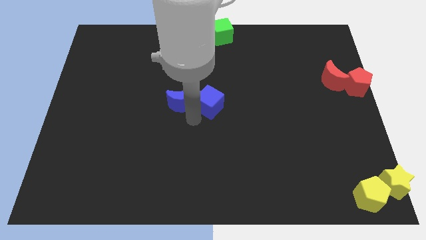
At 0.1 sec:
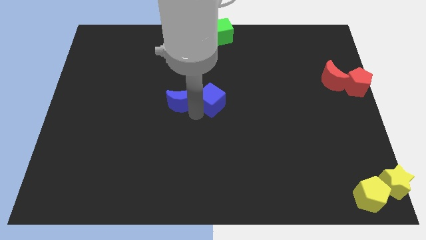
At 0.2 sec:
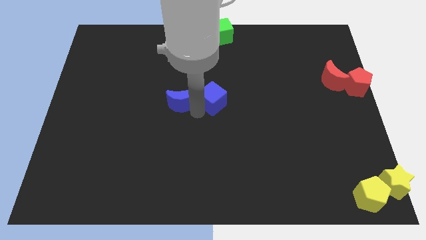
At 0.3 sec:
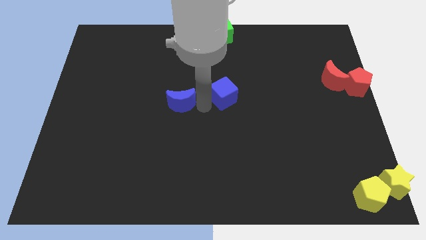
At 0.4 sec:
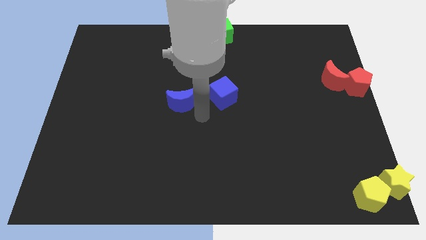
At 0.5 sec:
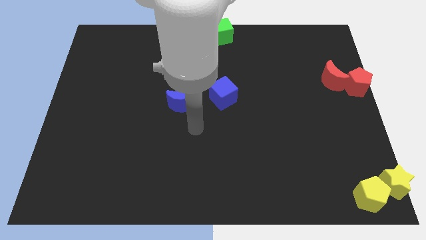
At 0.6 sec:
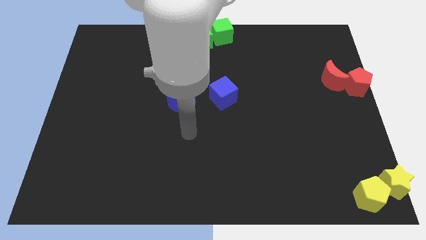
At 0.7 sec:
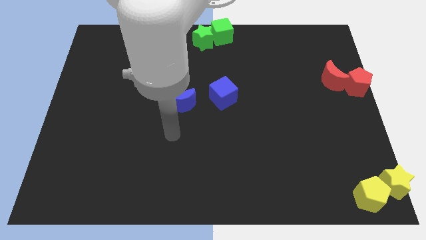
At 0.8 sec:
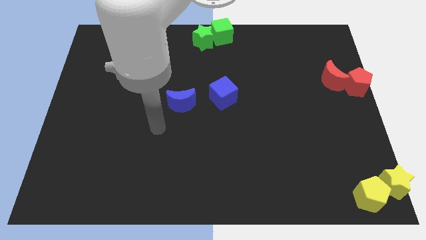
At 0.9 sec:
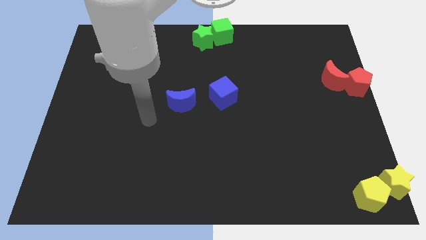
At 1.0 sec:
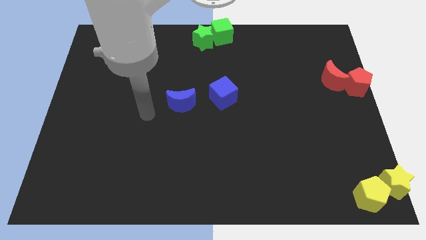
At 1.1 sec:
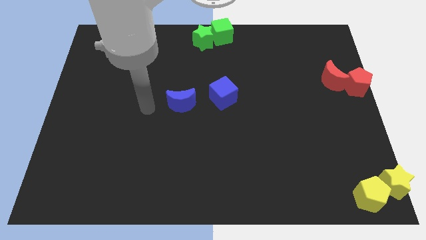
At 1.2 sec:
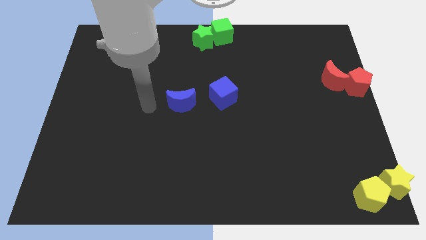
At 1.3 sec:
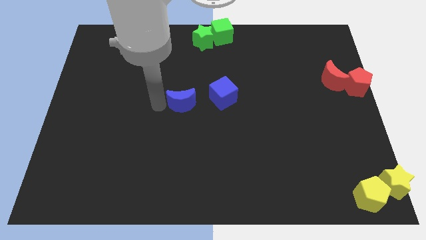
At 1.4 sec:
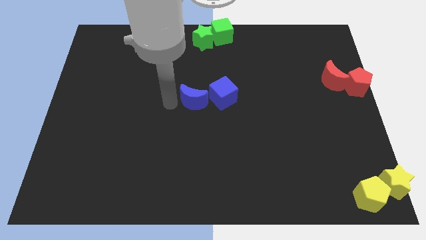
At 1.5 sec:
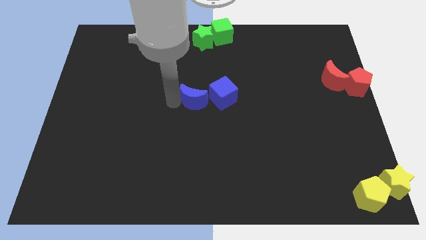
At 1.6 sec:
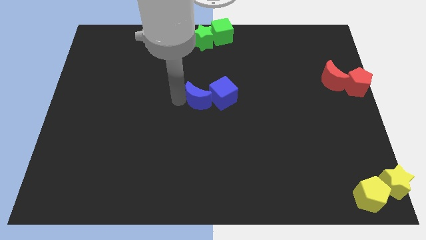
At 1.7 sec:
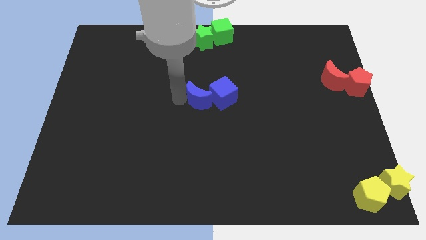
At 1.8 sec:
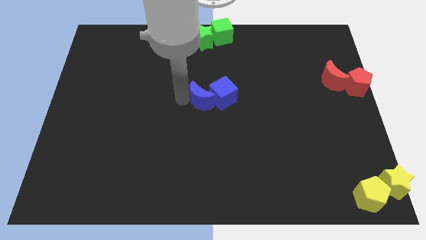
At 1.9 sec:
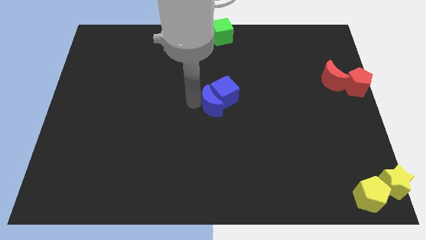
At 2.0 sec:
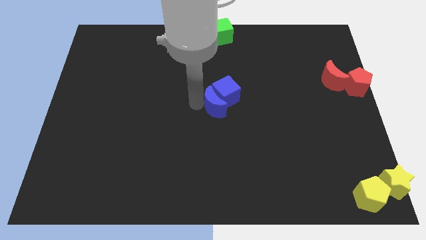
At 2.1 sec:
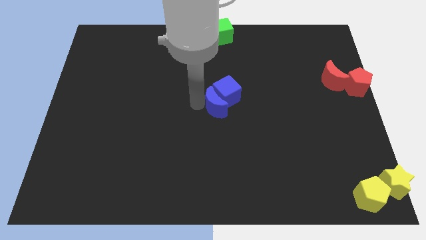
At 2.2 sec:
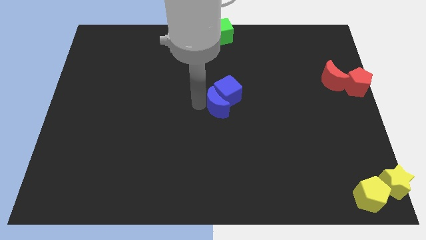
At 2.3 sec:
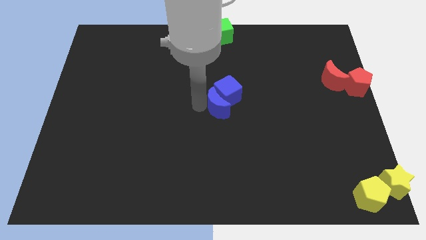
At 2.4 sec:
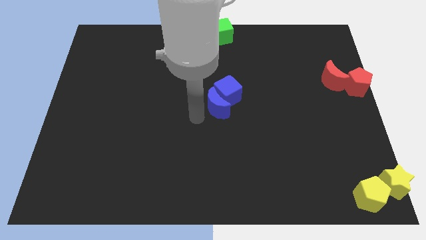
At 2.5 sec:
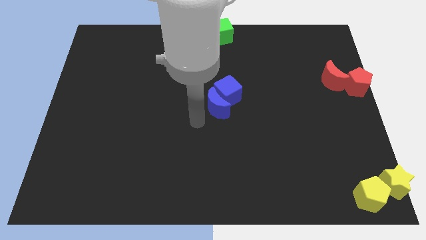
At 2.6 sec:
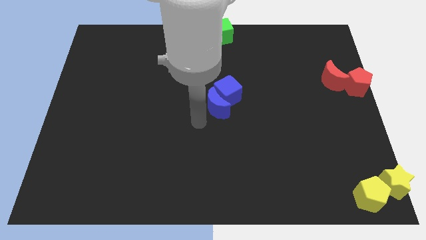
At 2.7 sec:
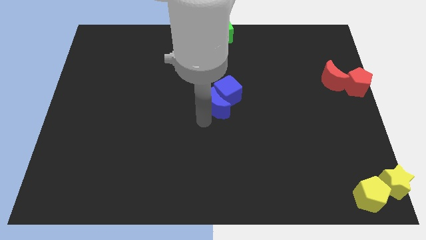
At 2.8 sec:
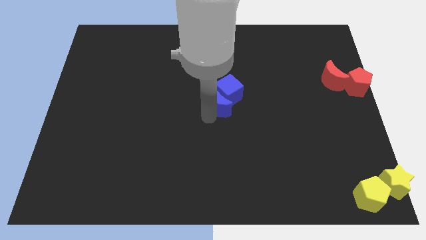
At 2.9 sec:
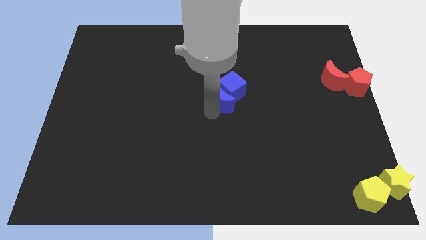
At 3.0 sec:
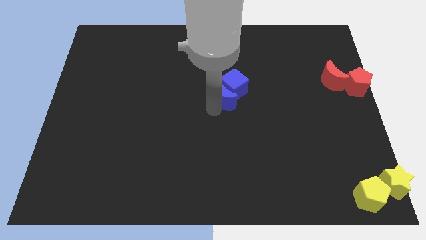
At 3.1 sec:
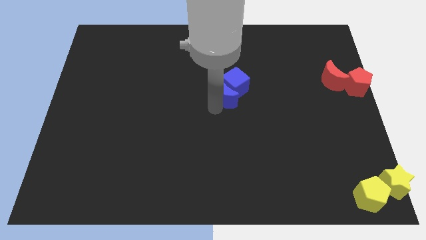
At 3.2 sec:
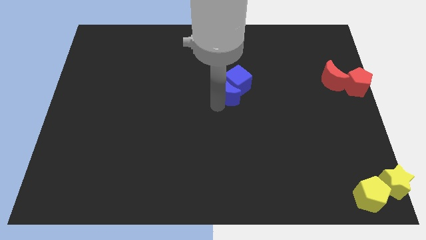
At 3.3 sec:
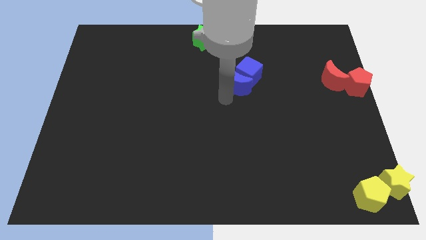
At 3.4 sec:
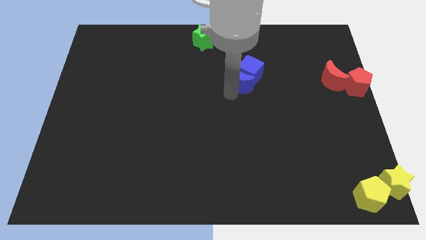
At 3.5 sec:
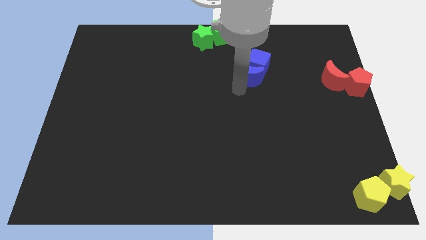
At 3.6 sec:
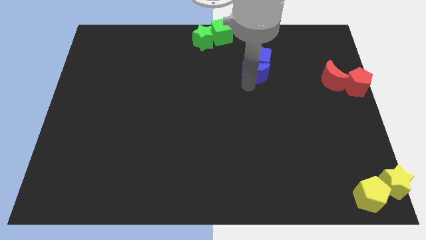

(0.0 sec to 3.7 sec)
push the blue crescent along the blue cube diagonal to the green cube

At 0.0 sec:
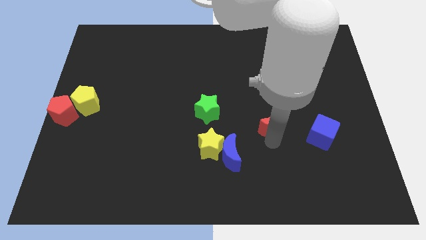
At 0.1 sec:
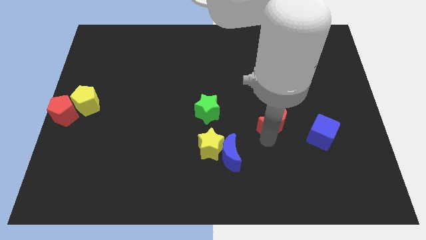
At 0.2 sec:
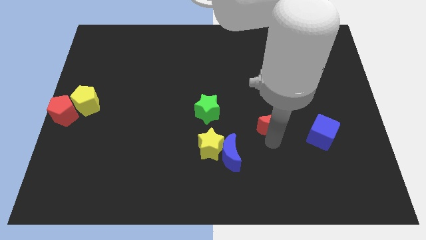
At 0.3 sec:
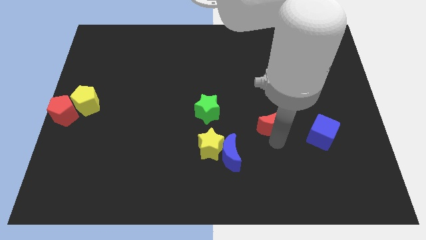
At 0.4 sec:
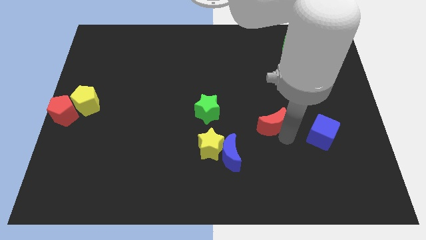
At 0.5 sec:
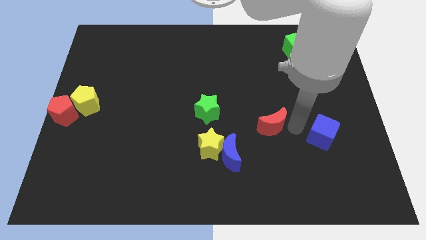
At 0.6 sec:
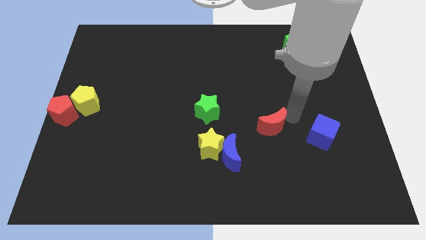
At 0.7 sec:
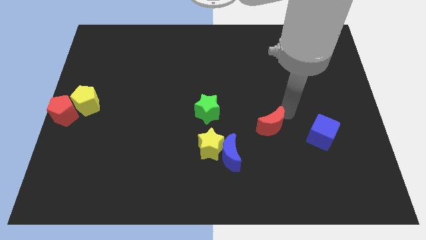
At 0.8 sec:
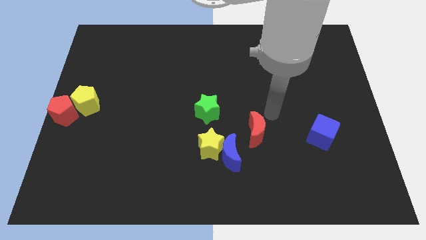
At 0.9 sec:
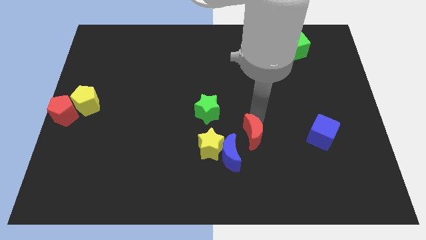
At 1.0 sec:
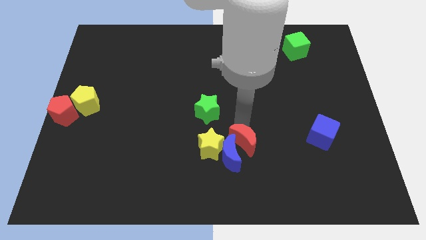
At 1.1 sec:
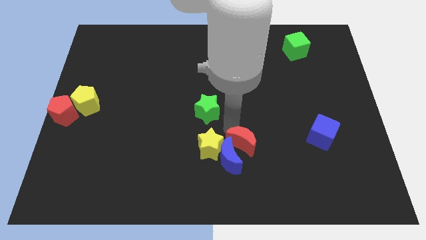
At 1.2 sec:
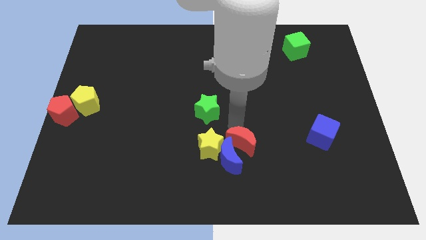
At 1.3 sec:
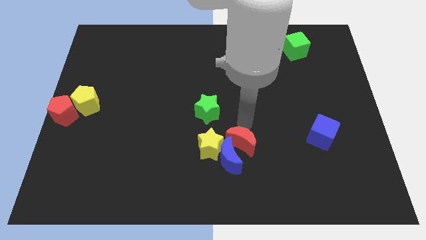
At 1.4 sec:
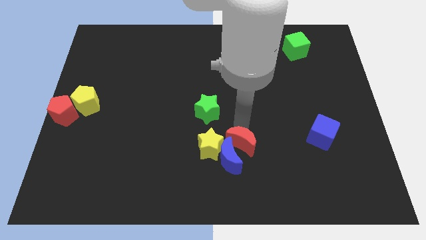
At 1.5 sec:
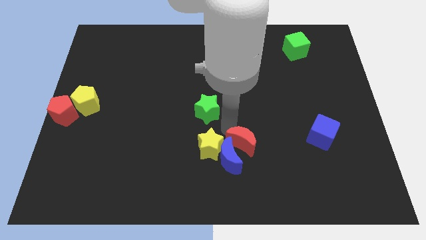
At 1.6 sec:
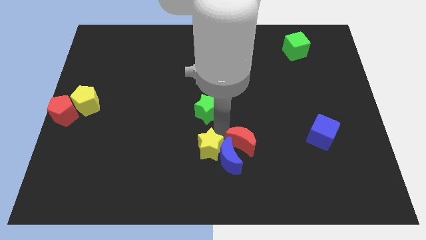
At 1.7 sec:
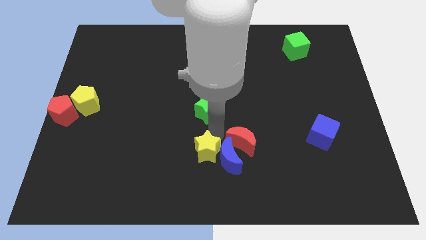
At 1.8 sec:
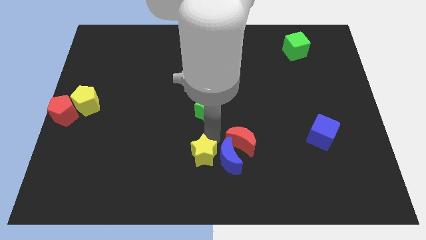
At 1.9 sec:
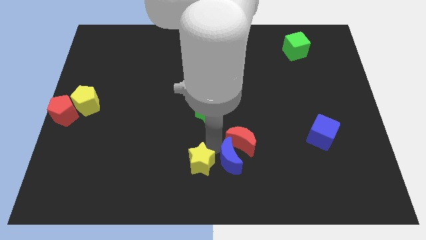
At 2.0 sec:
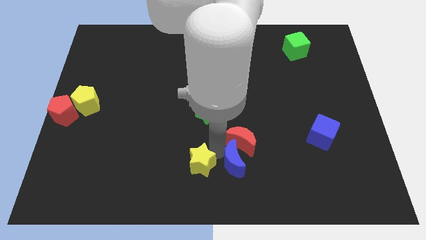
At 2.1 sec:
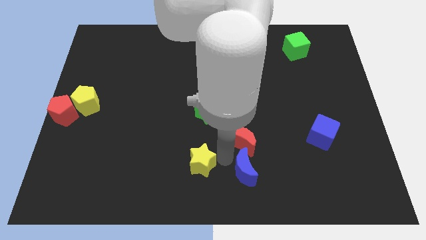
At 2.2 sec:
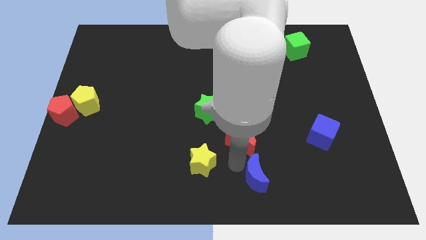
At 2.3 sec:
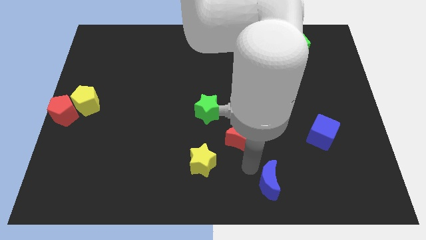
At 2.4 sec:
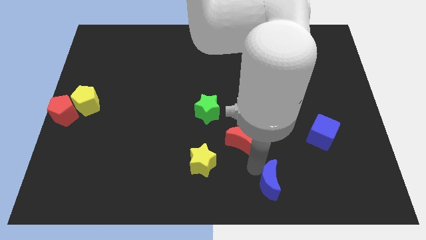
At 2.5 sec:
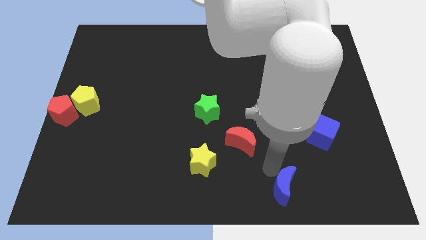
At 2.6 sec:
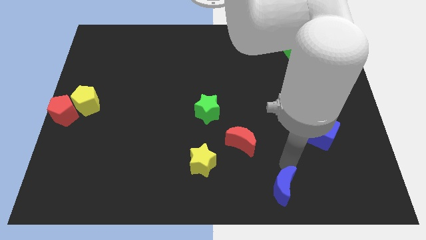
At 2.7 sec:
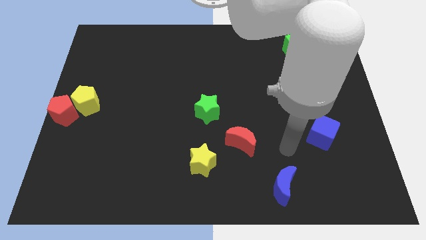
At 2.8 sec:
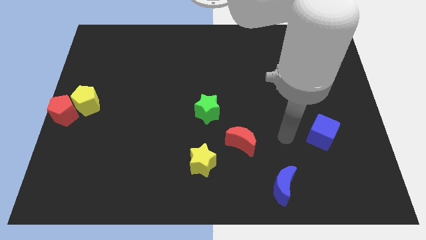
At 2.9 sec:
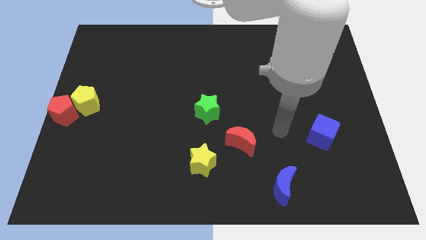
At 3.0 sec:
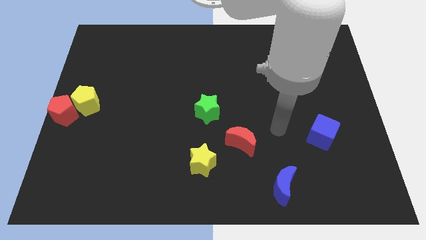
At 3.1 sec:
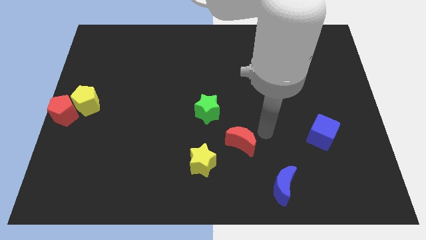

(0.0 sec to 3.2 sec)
separate the blue moon from the yellow star

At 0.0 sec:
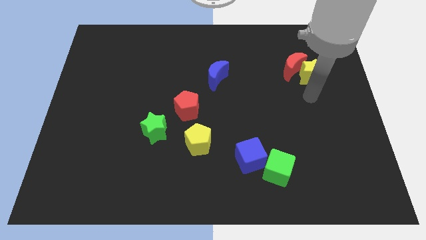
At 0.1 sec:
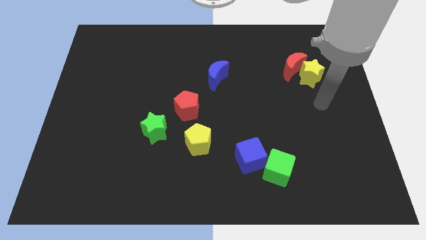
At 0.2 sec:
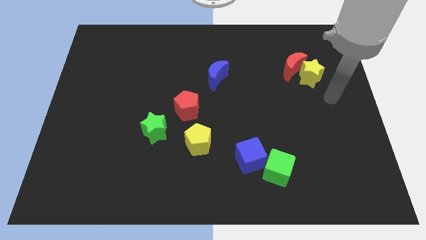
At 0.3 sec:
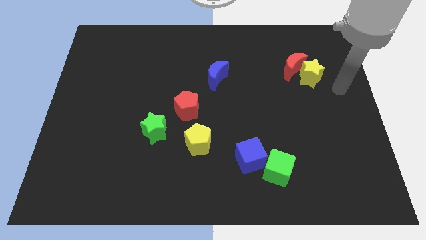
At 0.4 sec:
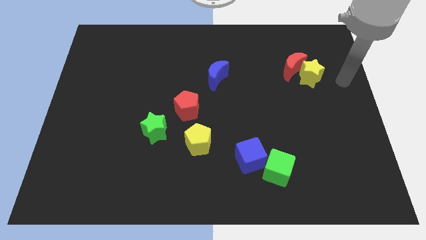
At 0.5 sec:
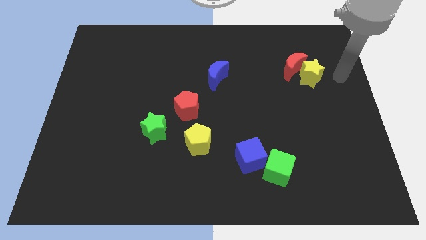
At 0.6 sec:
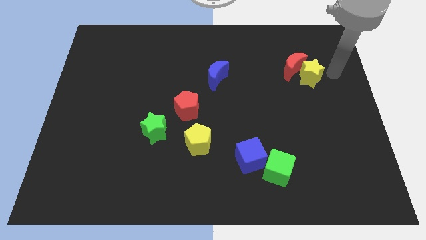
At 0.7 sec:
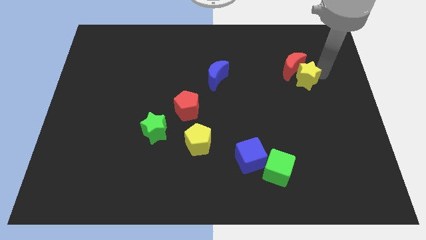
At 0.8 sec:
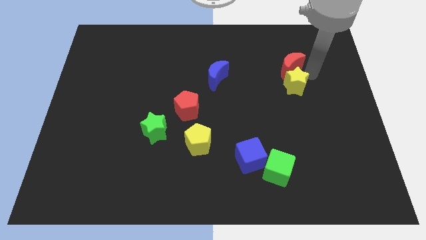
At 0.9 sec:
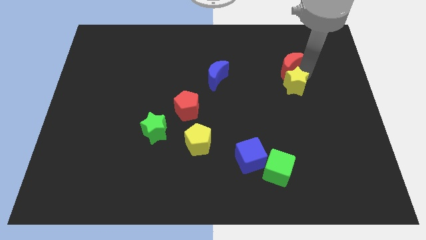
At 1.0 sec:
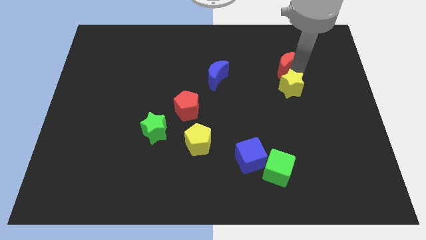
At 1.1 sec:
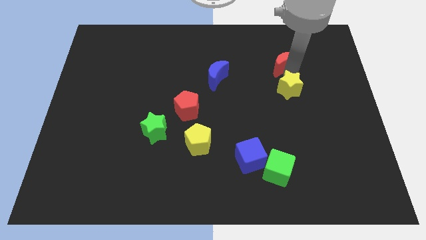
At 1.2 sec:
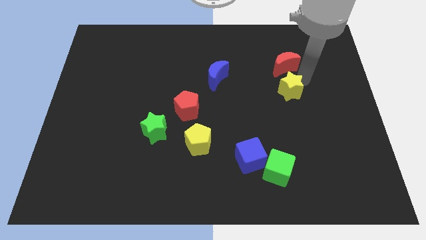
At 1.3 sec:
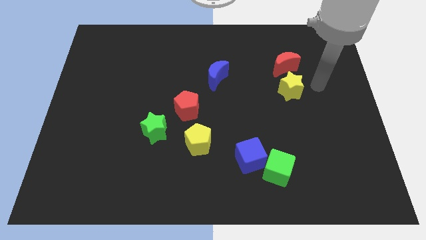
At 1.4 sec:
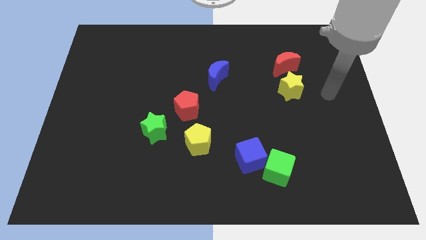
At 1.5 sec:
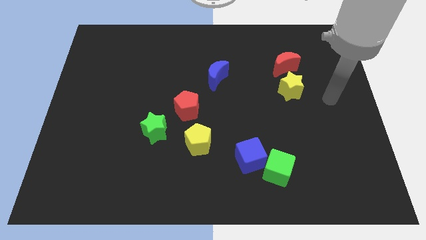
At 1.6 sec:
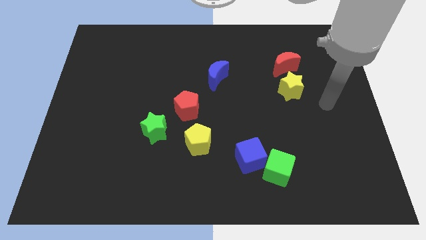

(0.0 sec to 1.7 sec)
separate the yellow star from the red crescent

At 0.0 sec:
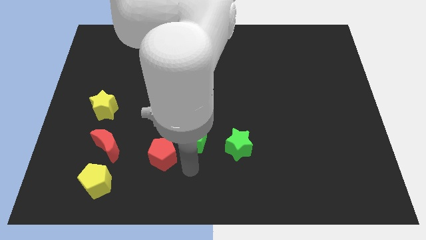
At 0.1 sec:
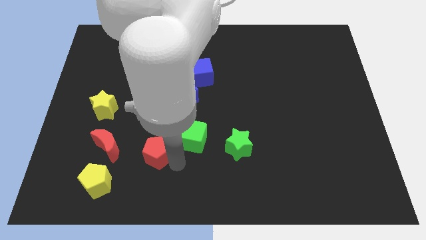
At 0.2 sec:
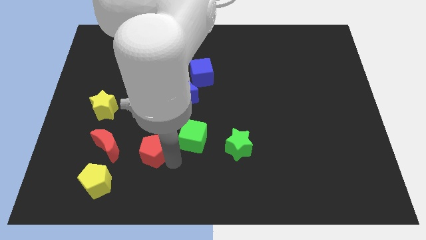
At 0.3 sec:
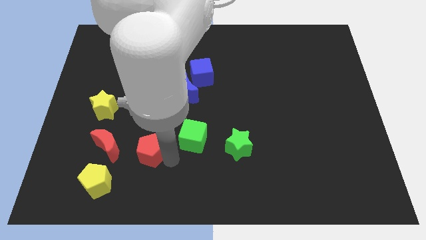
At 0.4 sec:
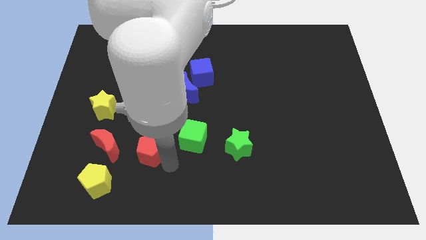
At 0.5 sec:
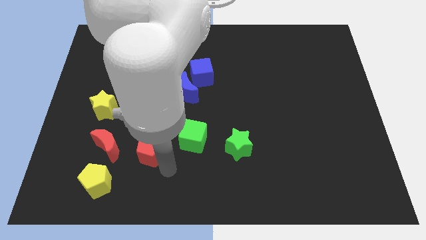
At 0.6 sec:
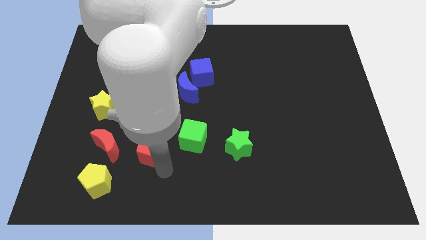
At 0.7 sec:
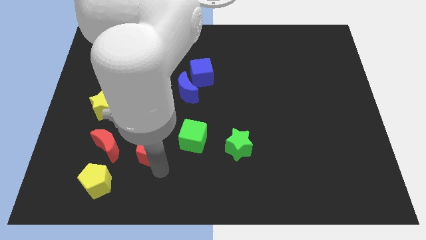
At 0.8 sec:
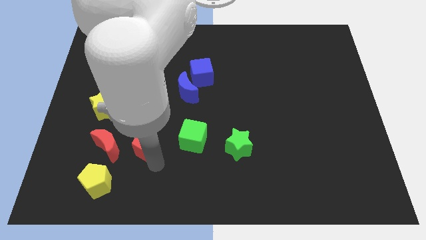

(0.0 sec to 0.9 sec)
push red pentagon beside red crescent
